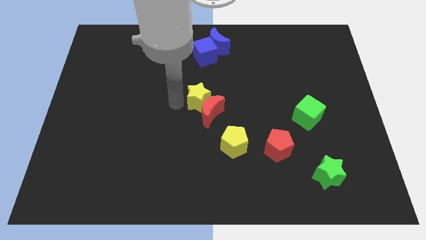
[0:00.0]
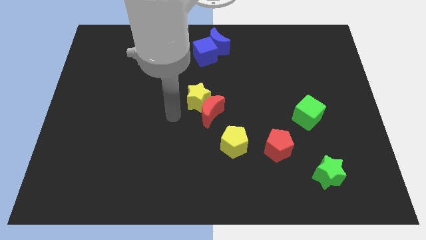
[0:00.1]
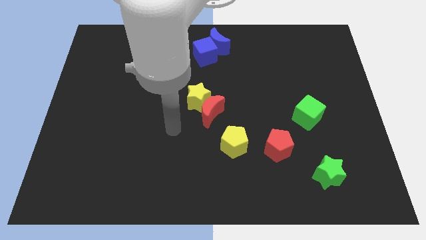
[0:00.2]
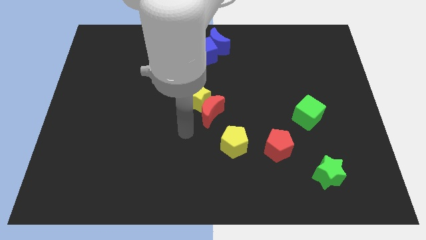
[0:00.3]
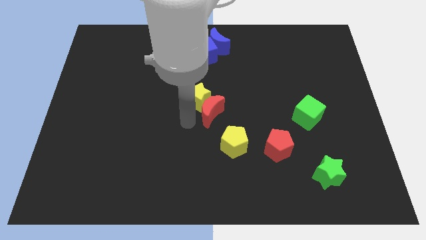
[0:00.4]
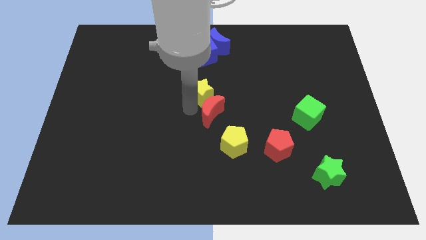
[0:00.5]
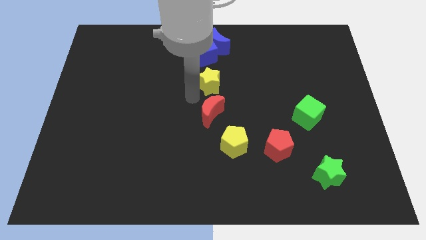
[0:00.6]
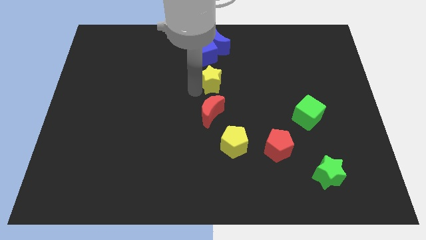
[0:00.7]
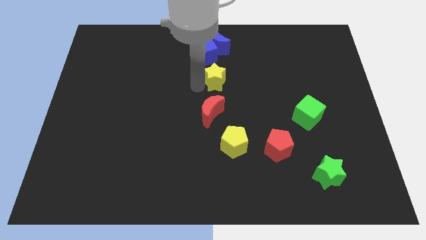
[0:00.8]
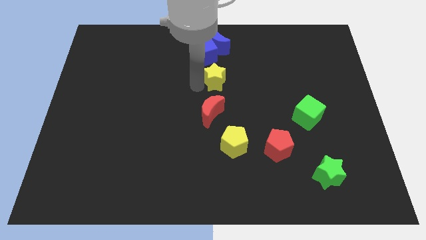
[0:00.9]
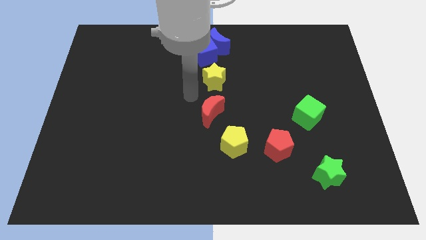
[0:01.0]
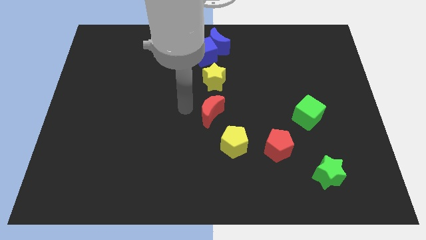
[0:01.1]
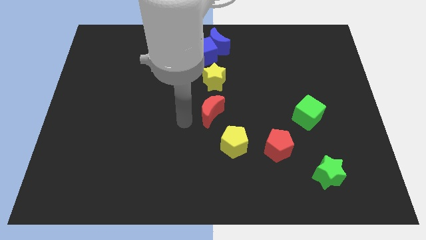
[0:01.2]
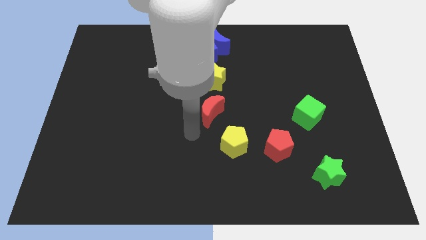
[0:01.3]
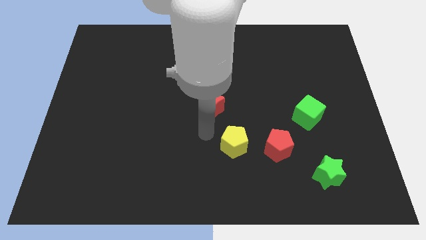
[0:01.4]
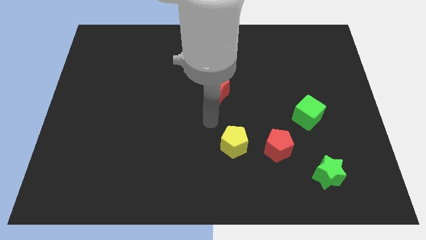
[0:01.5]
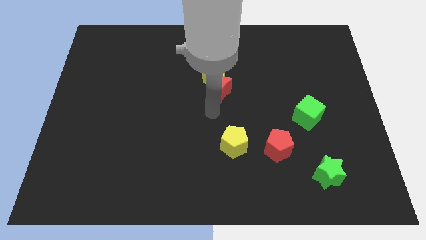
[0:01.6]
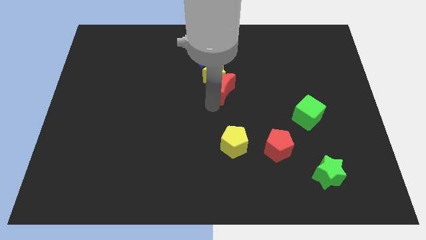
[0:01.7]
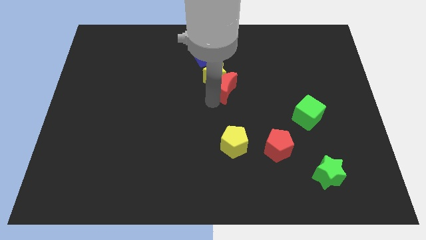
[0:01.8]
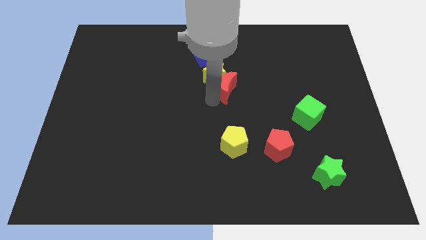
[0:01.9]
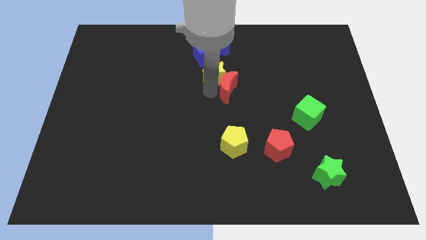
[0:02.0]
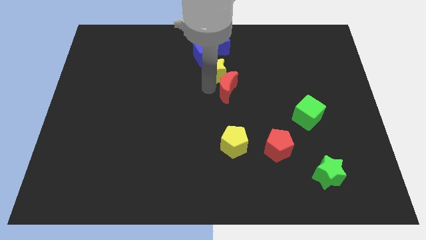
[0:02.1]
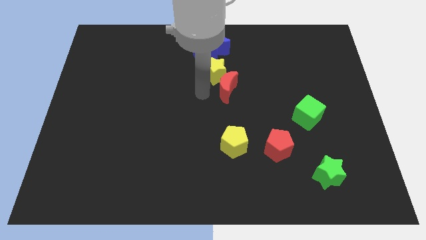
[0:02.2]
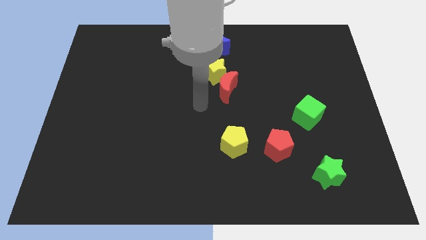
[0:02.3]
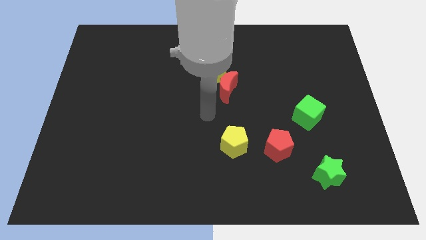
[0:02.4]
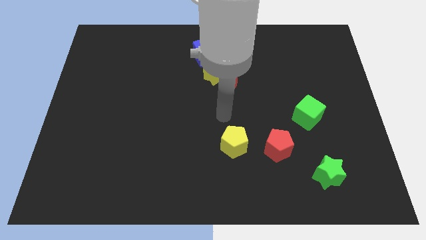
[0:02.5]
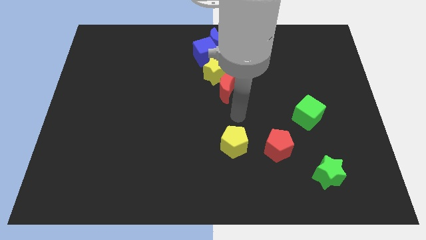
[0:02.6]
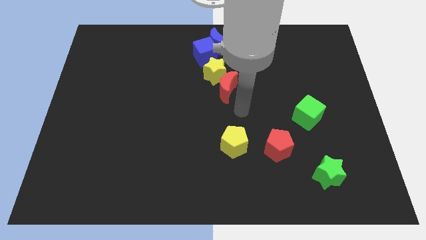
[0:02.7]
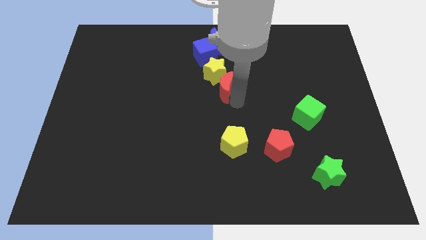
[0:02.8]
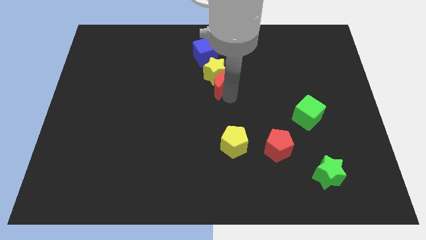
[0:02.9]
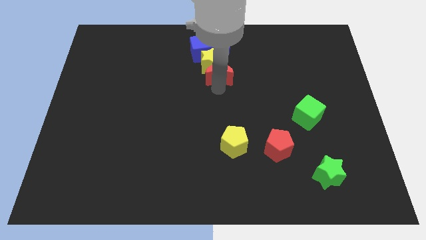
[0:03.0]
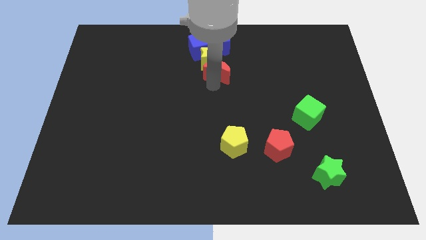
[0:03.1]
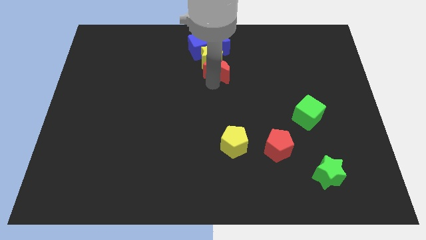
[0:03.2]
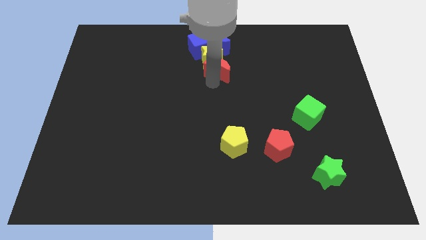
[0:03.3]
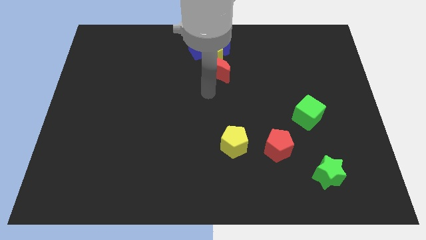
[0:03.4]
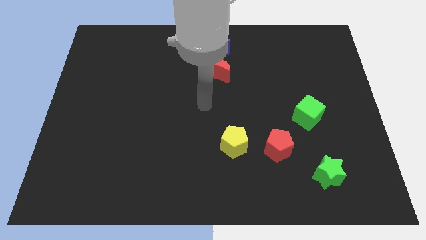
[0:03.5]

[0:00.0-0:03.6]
push the red crescent and yellow star into the blue cube

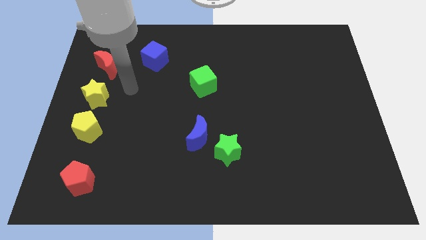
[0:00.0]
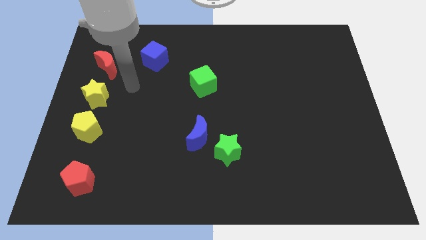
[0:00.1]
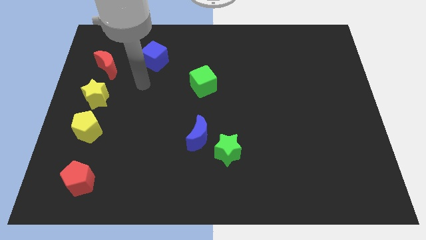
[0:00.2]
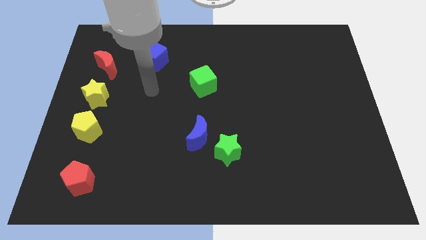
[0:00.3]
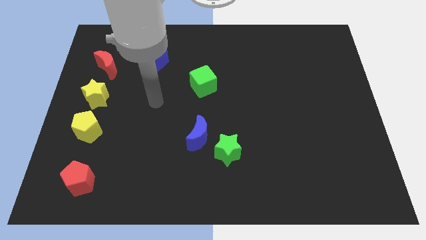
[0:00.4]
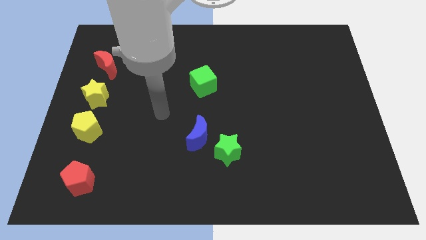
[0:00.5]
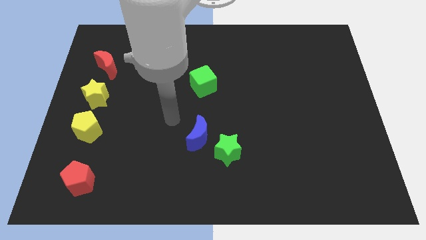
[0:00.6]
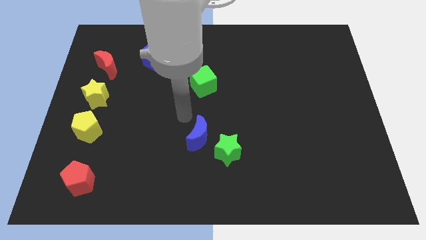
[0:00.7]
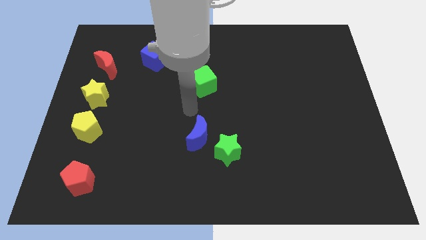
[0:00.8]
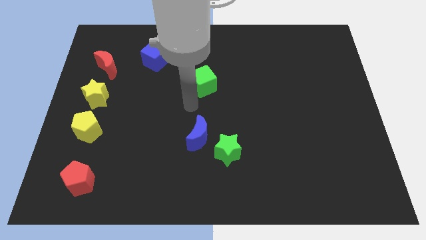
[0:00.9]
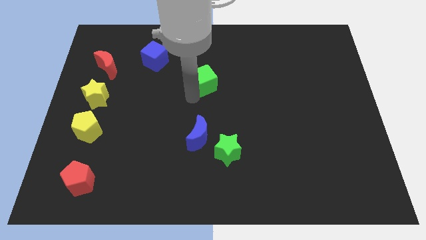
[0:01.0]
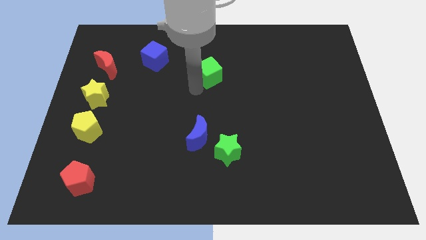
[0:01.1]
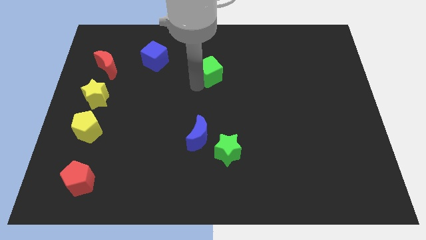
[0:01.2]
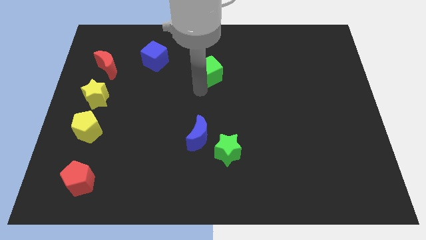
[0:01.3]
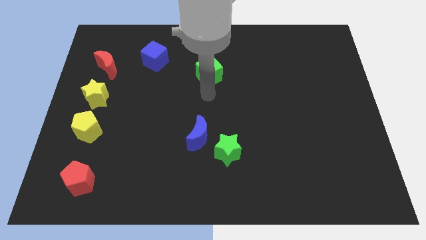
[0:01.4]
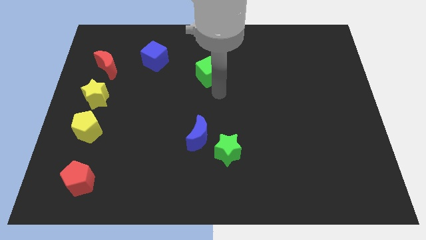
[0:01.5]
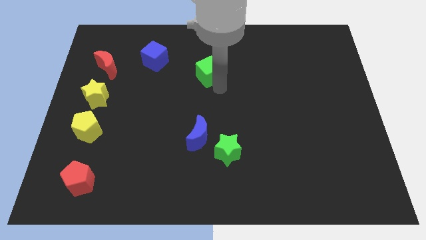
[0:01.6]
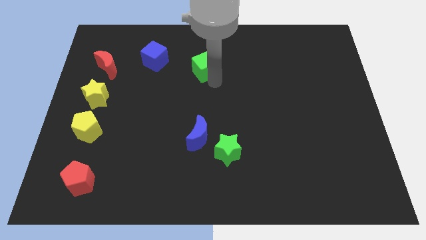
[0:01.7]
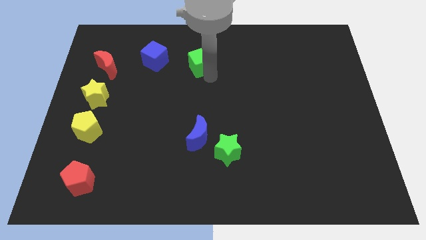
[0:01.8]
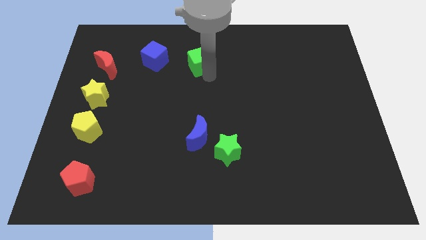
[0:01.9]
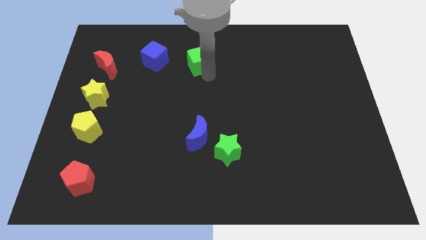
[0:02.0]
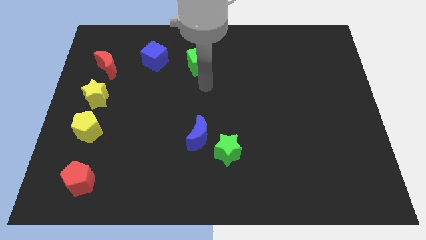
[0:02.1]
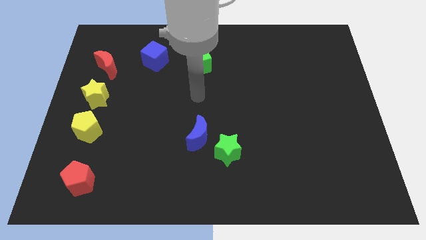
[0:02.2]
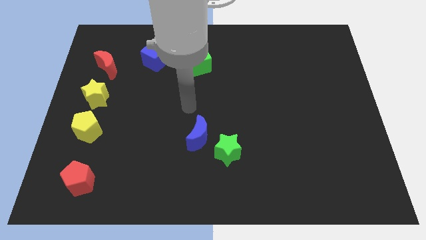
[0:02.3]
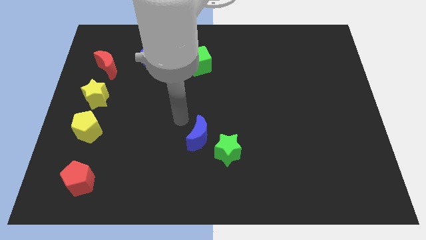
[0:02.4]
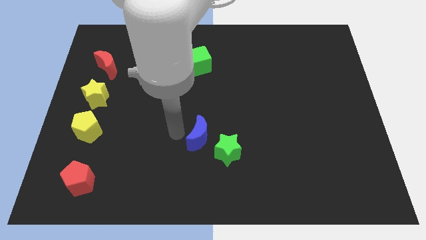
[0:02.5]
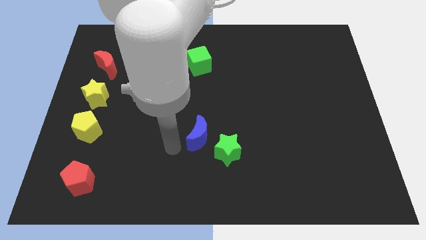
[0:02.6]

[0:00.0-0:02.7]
push the green cube to the right of the blue cube

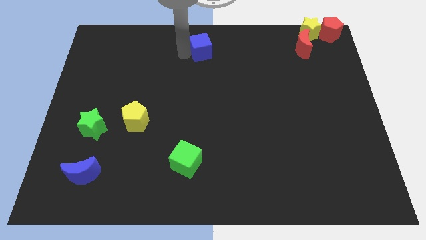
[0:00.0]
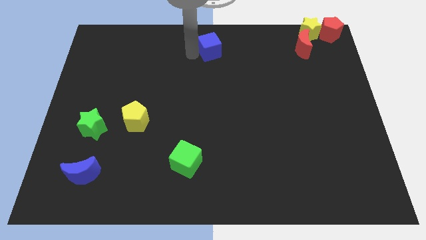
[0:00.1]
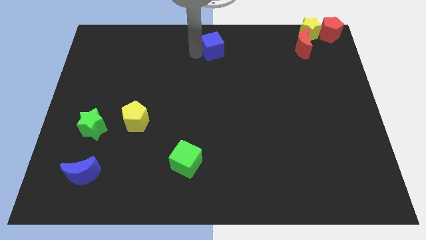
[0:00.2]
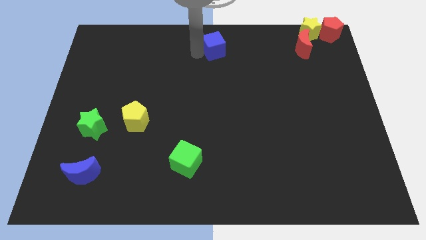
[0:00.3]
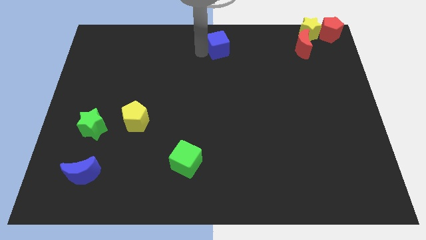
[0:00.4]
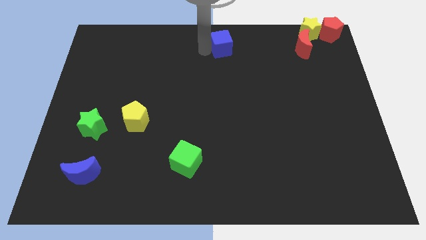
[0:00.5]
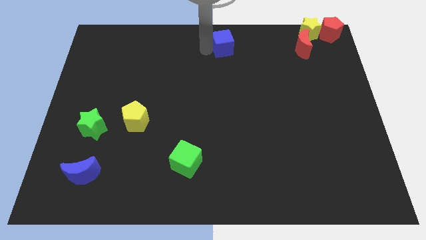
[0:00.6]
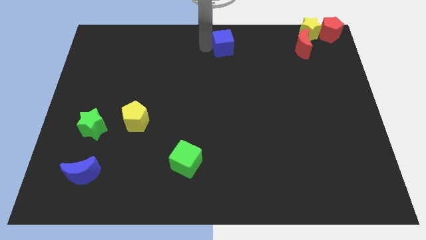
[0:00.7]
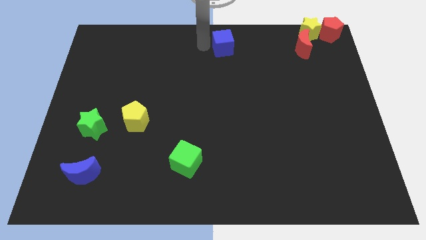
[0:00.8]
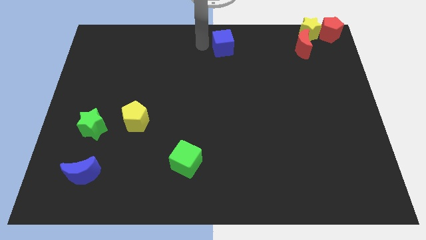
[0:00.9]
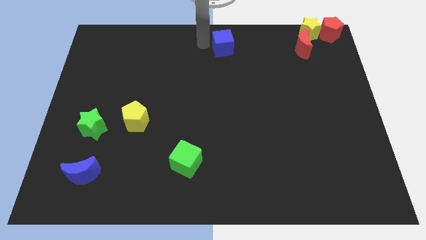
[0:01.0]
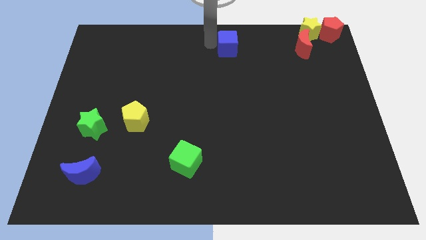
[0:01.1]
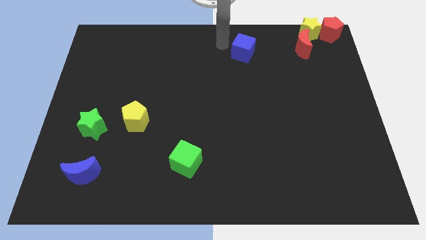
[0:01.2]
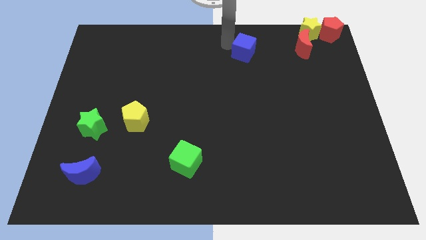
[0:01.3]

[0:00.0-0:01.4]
move blue cube slightly towards the top right corner of the board

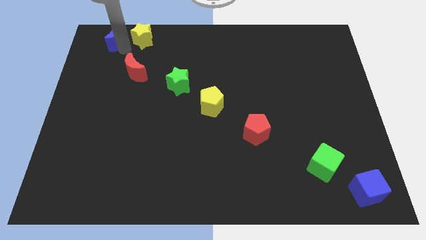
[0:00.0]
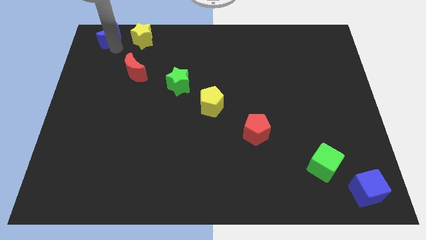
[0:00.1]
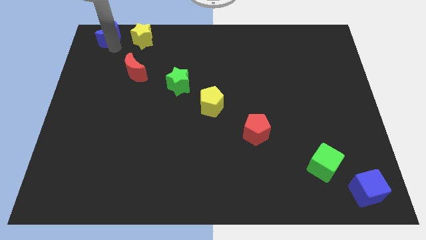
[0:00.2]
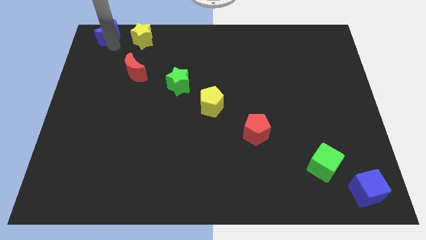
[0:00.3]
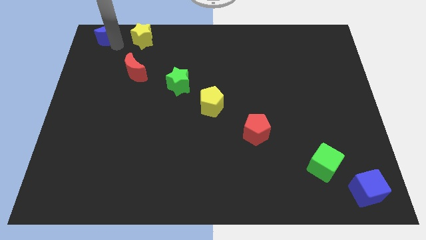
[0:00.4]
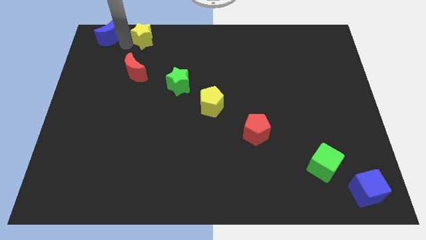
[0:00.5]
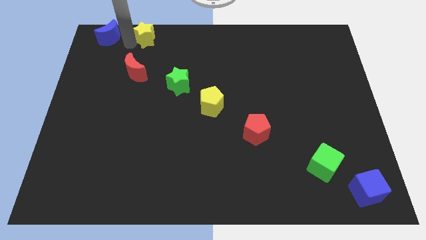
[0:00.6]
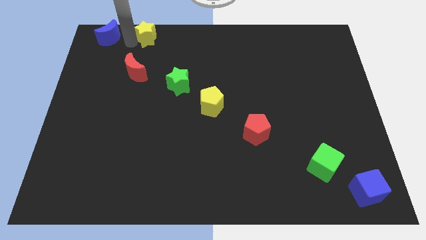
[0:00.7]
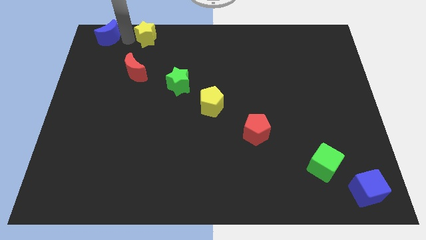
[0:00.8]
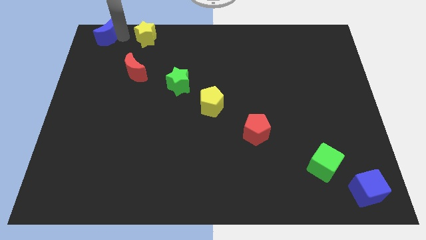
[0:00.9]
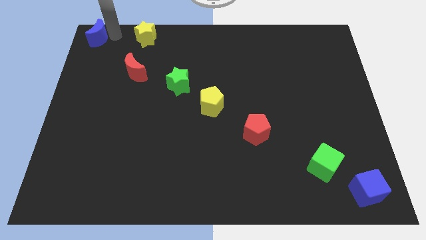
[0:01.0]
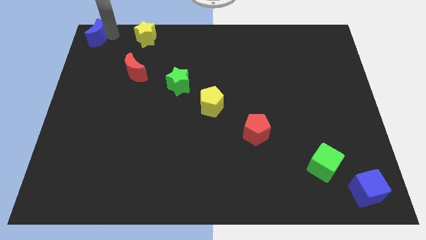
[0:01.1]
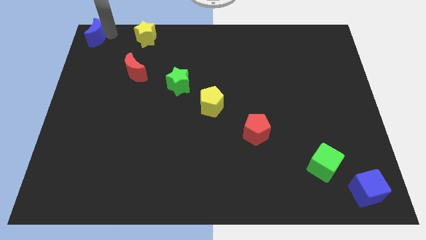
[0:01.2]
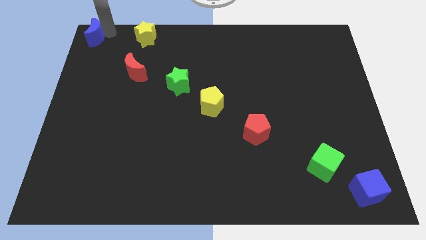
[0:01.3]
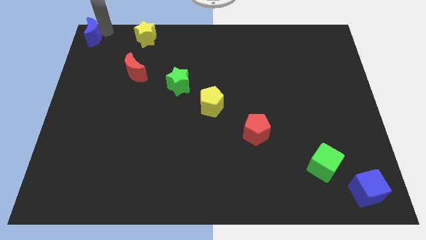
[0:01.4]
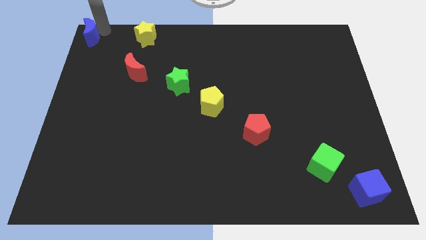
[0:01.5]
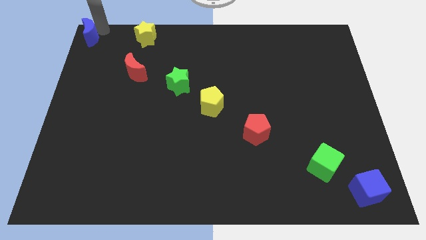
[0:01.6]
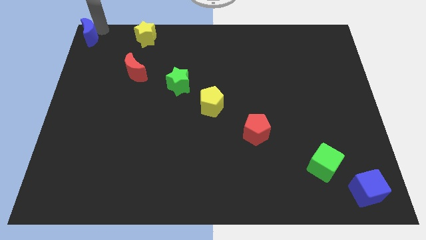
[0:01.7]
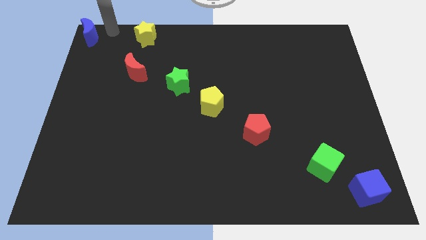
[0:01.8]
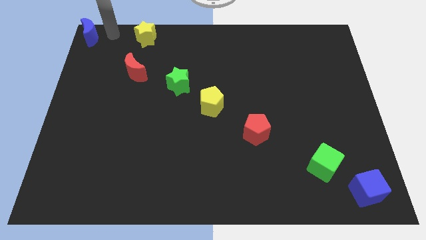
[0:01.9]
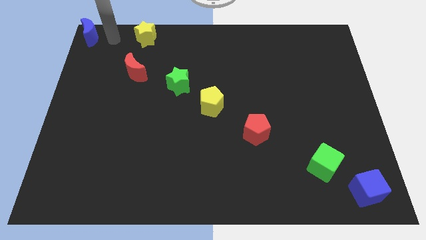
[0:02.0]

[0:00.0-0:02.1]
move the blue moon to the top left corner
